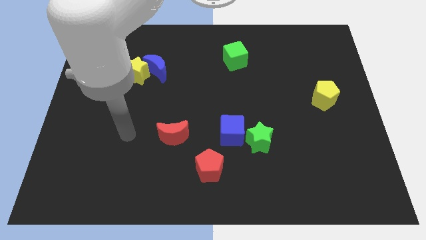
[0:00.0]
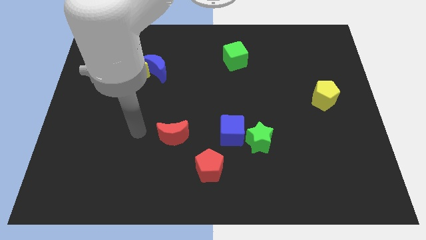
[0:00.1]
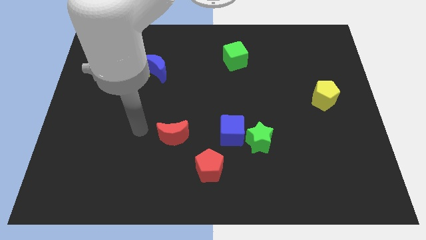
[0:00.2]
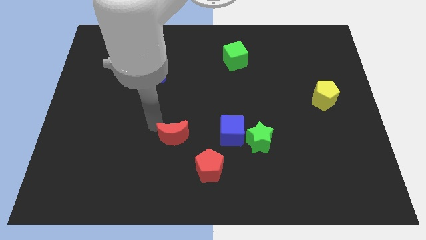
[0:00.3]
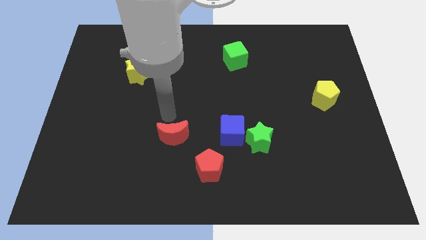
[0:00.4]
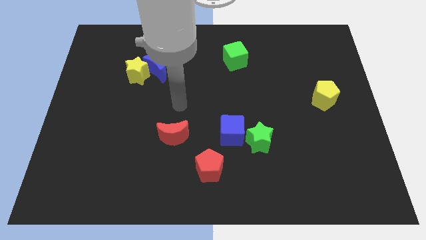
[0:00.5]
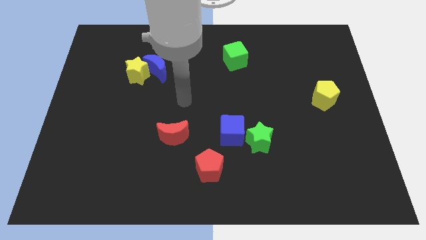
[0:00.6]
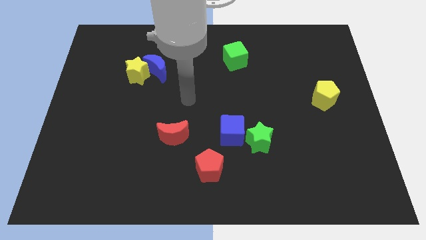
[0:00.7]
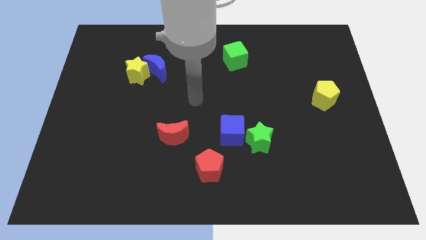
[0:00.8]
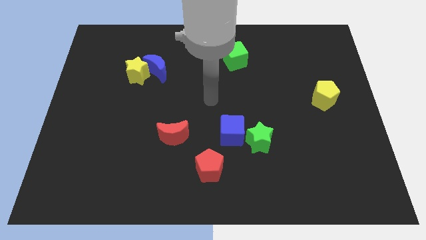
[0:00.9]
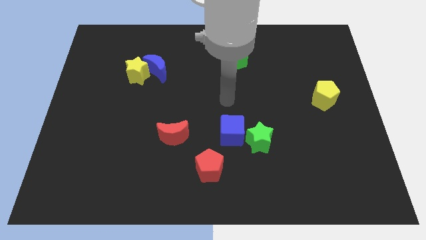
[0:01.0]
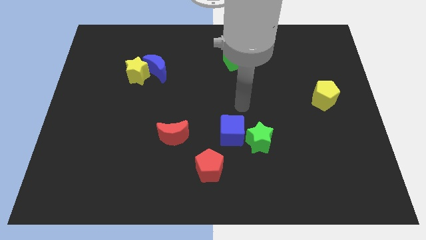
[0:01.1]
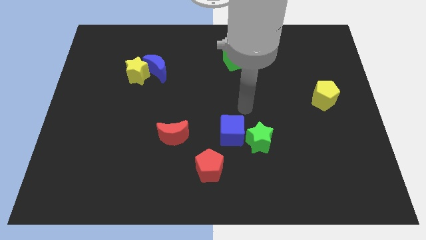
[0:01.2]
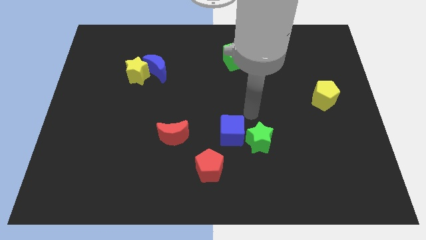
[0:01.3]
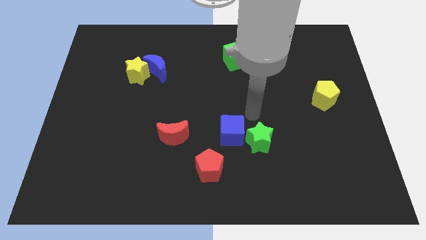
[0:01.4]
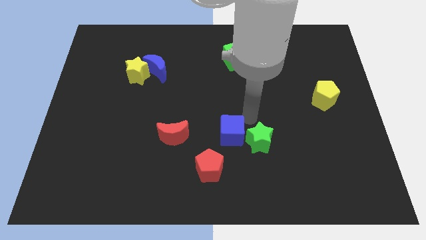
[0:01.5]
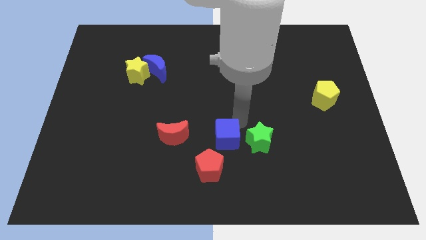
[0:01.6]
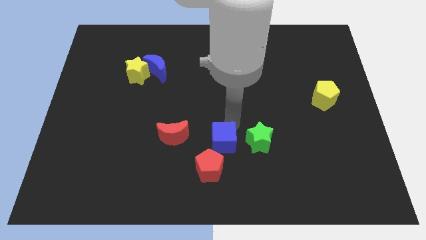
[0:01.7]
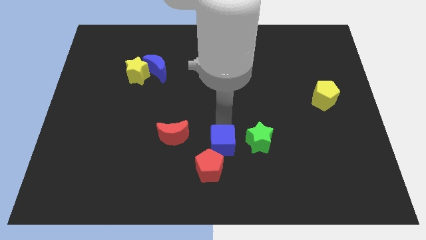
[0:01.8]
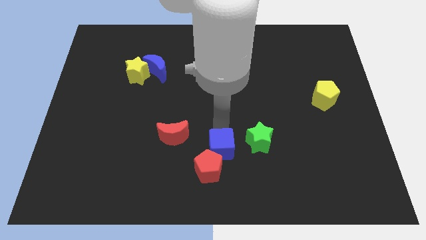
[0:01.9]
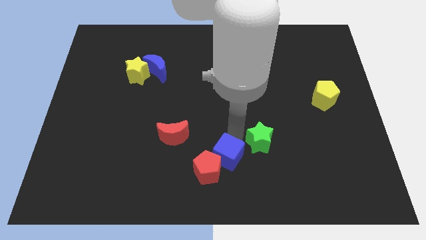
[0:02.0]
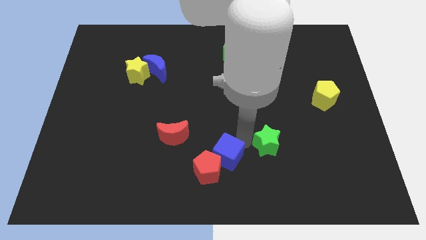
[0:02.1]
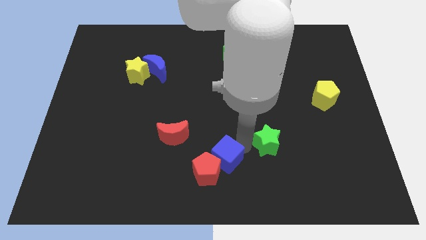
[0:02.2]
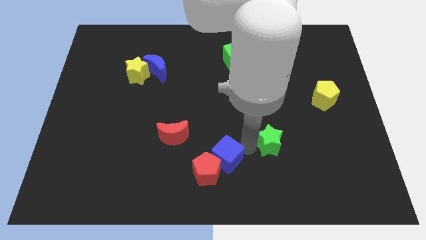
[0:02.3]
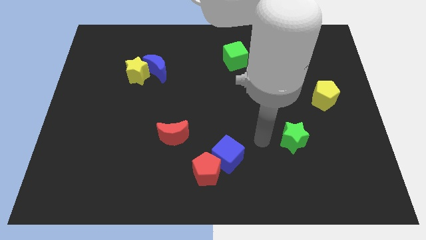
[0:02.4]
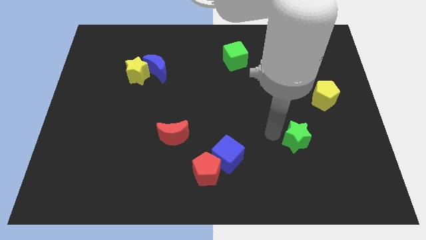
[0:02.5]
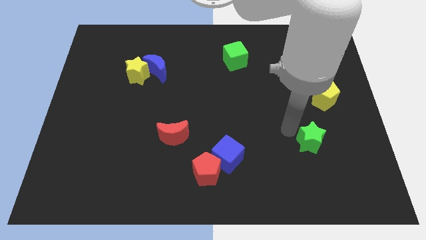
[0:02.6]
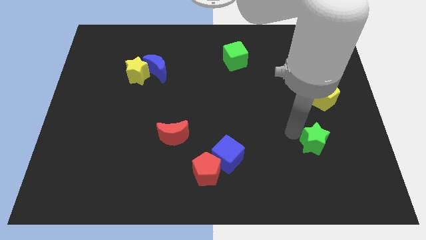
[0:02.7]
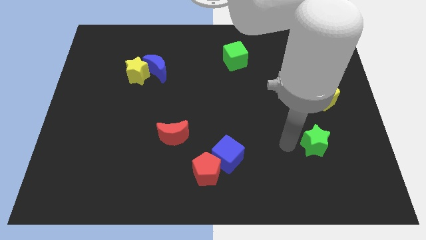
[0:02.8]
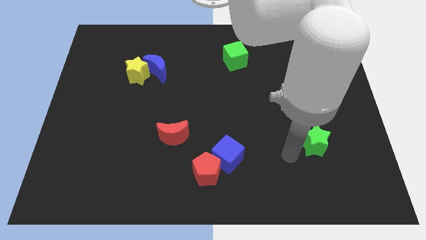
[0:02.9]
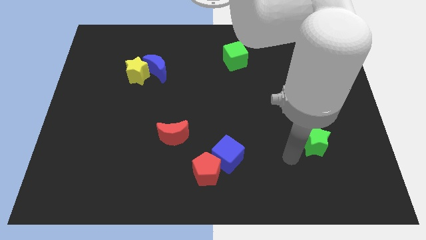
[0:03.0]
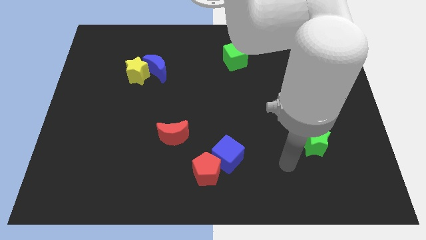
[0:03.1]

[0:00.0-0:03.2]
push the blue cube above red pentagon

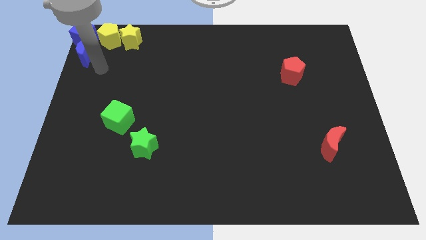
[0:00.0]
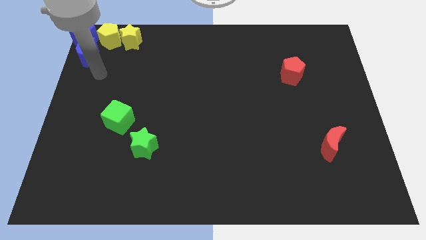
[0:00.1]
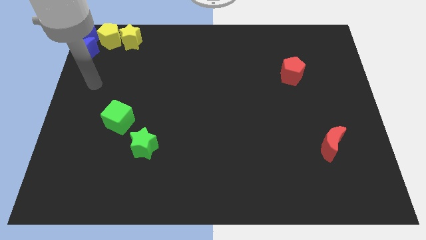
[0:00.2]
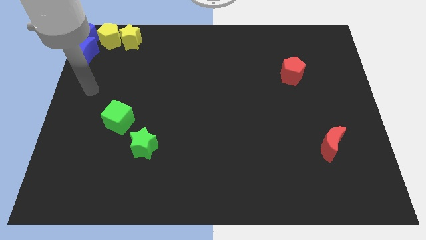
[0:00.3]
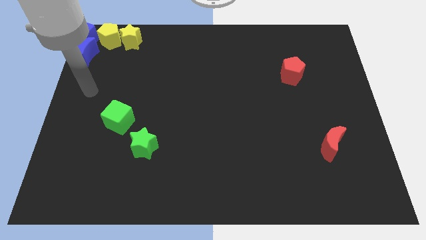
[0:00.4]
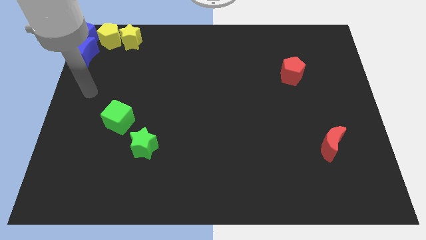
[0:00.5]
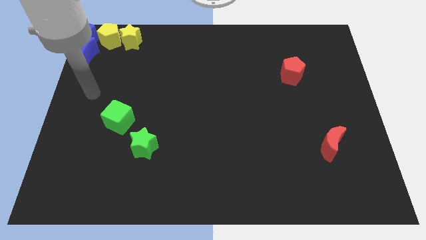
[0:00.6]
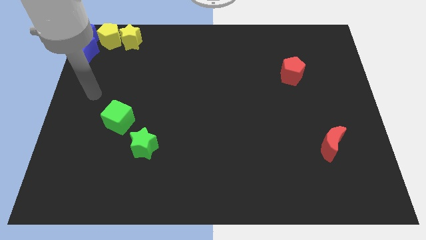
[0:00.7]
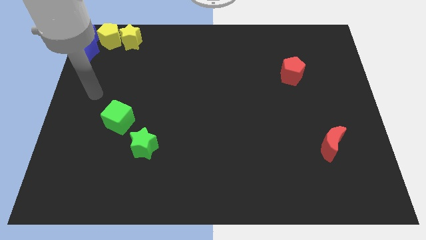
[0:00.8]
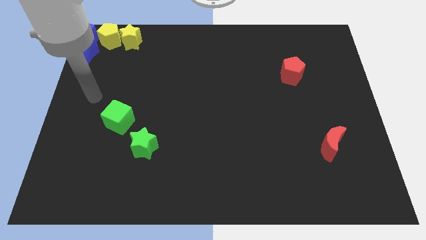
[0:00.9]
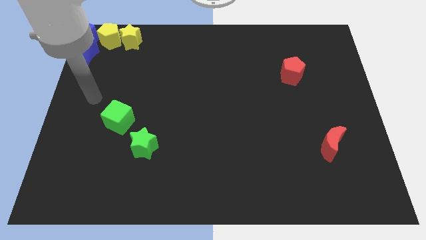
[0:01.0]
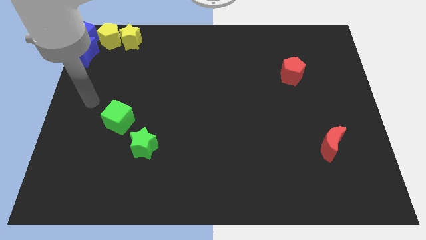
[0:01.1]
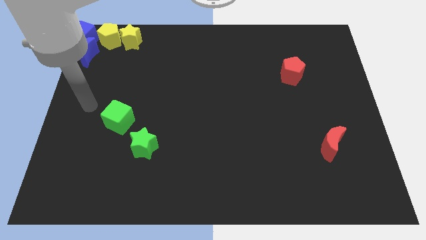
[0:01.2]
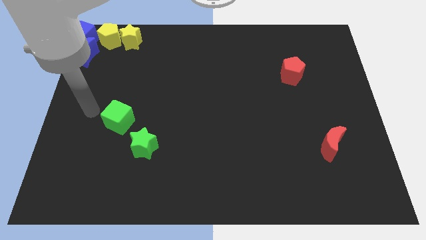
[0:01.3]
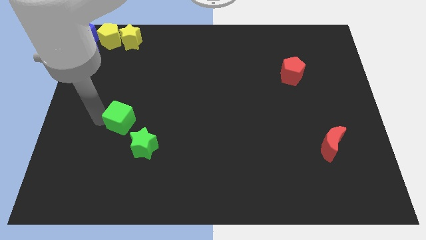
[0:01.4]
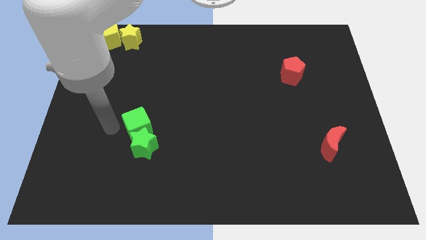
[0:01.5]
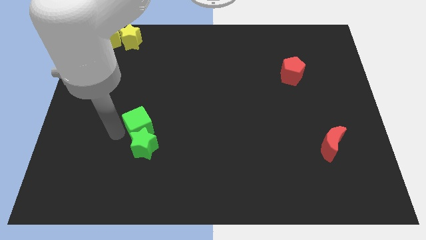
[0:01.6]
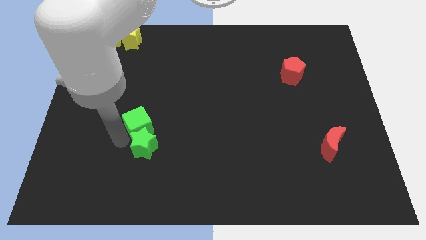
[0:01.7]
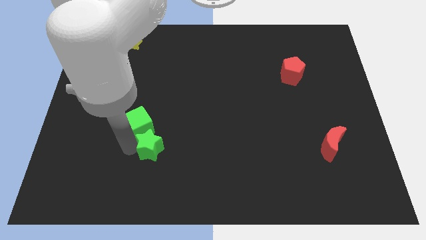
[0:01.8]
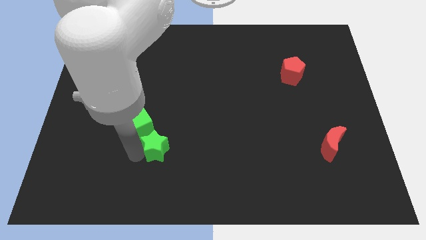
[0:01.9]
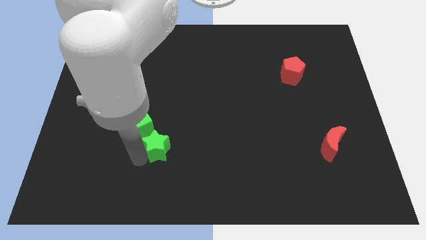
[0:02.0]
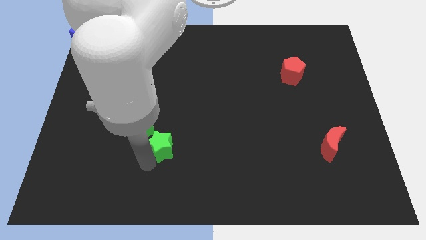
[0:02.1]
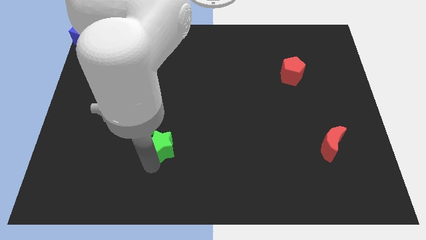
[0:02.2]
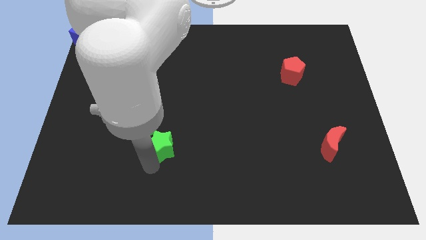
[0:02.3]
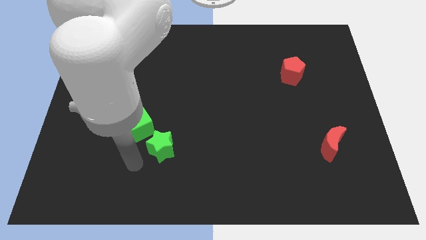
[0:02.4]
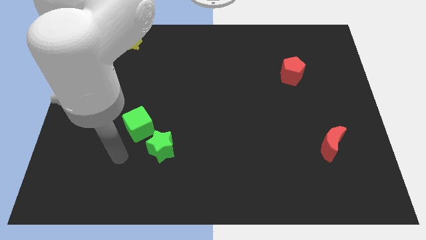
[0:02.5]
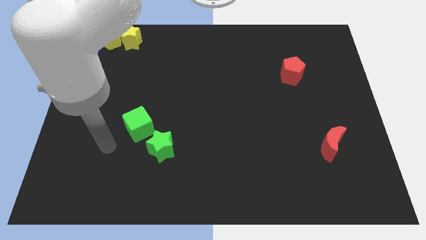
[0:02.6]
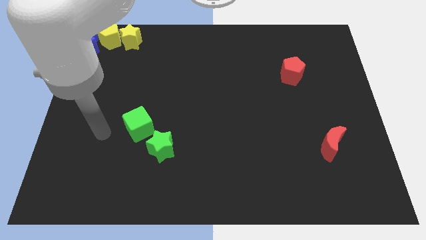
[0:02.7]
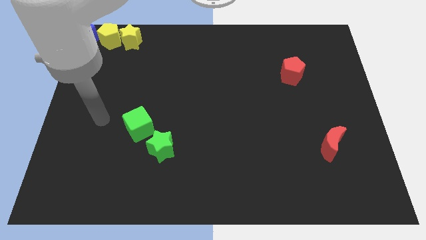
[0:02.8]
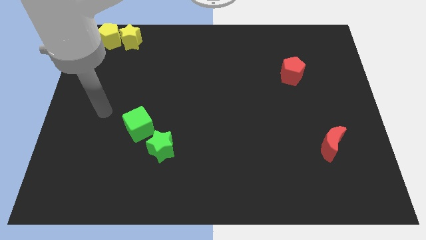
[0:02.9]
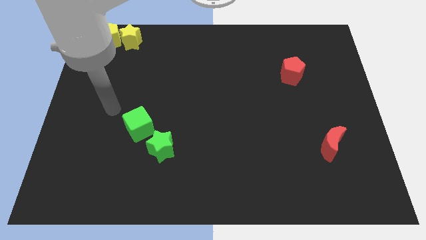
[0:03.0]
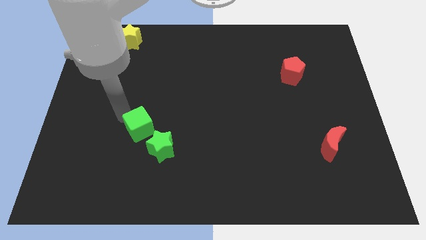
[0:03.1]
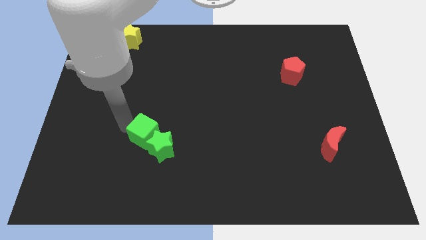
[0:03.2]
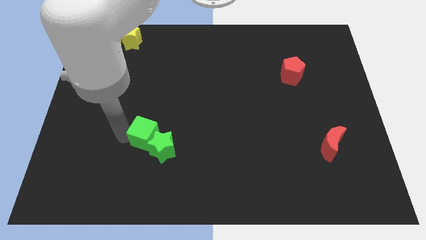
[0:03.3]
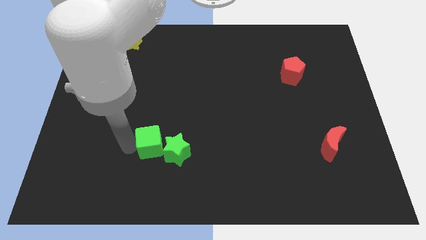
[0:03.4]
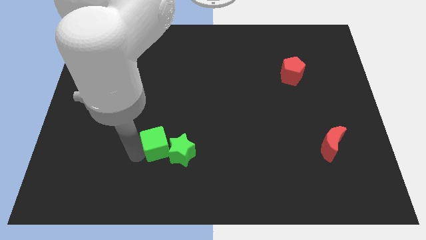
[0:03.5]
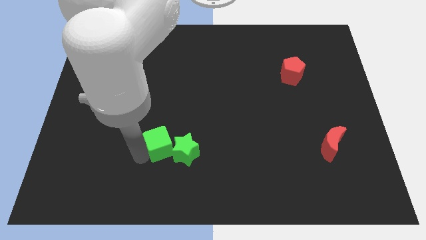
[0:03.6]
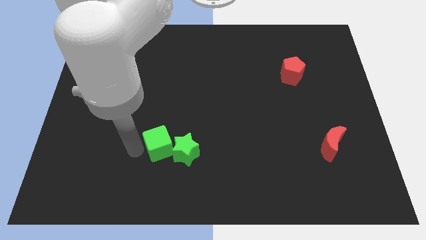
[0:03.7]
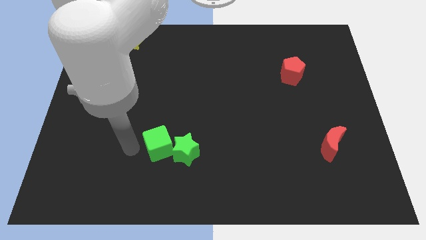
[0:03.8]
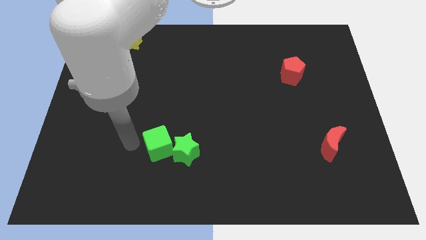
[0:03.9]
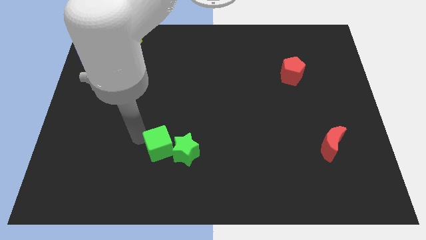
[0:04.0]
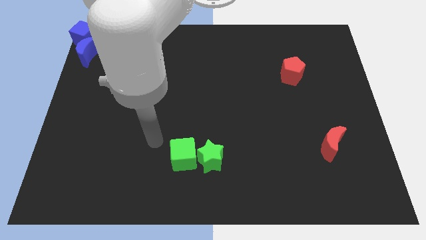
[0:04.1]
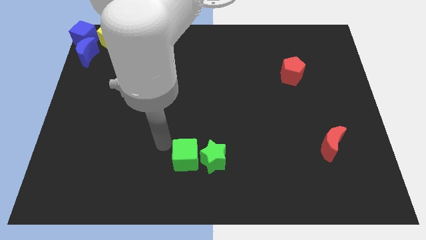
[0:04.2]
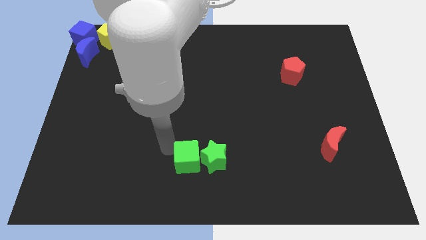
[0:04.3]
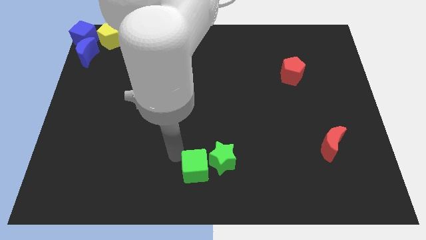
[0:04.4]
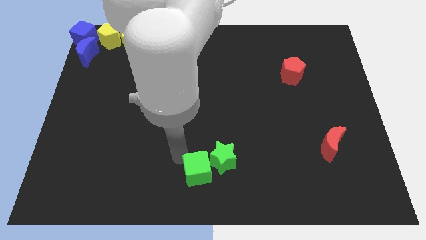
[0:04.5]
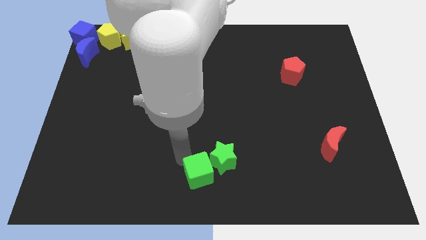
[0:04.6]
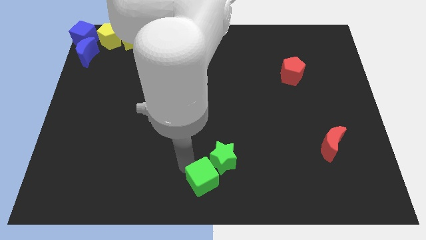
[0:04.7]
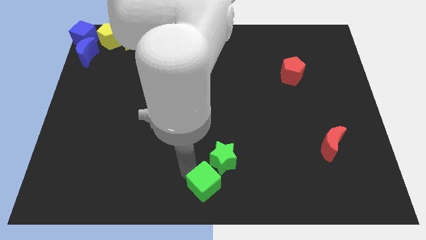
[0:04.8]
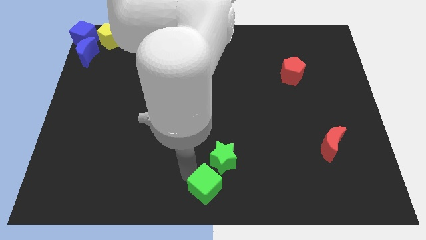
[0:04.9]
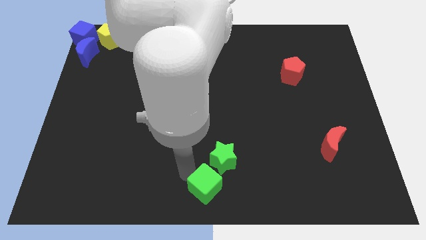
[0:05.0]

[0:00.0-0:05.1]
push the green star with the green cube

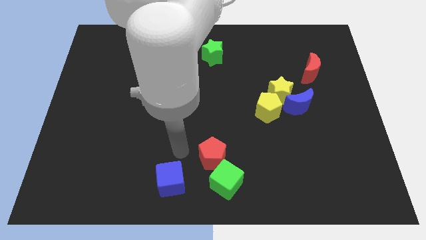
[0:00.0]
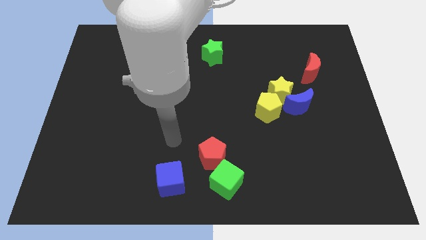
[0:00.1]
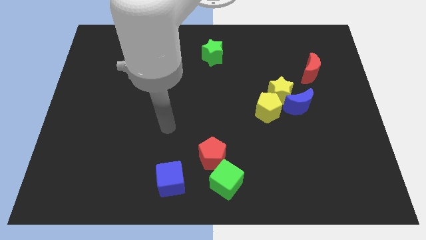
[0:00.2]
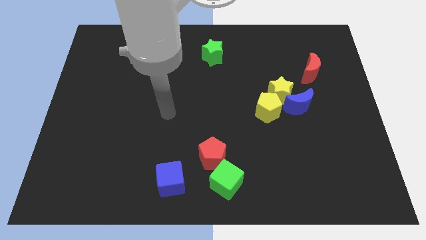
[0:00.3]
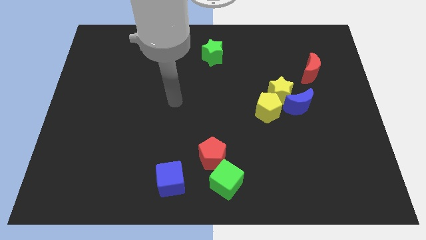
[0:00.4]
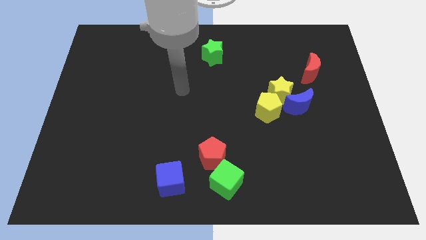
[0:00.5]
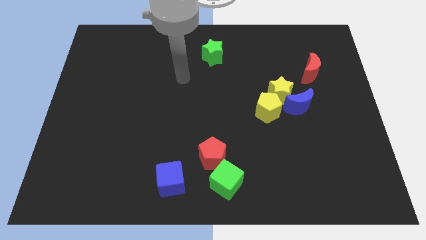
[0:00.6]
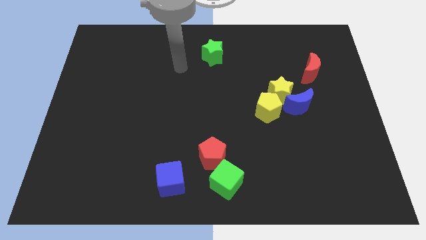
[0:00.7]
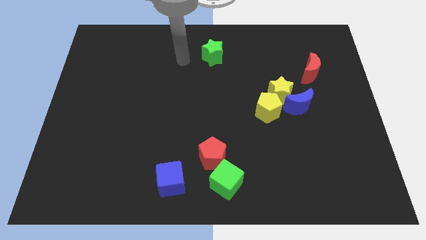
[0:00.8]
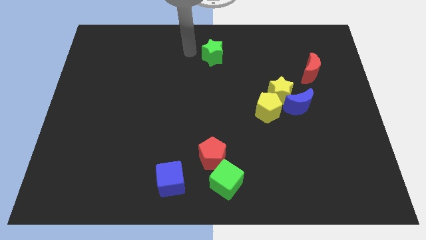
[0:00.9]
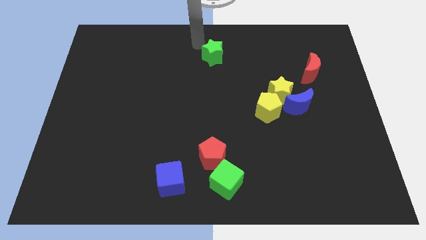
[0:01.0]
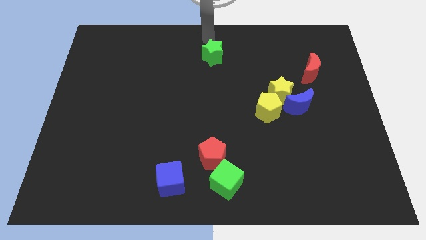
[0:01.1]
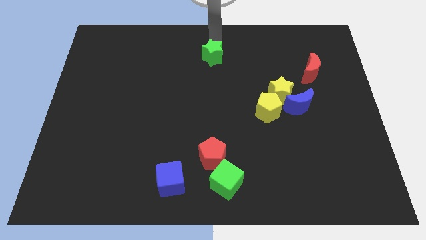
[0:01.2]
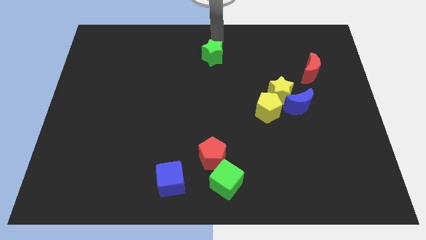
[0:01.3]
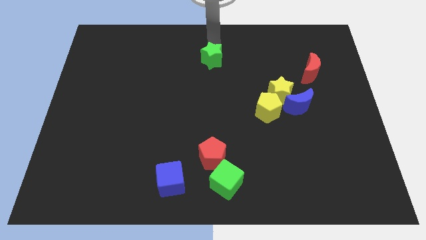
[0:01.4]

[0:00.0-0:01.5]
tap the top side of the green star
